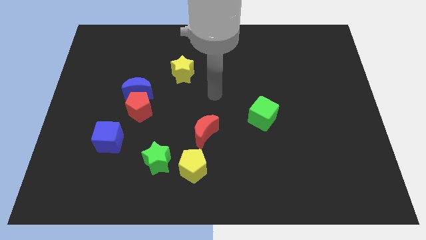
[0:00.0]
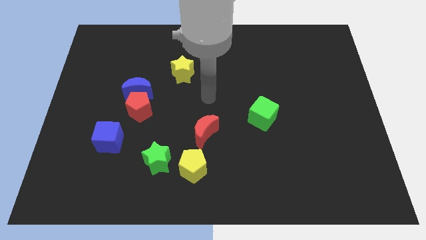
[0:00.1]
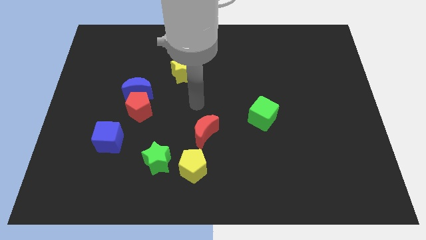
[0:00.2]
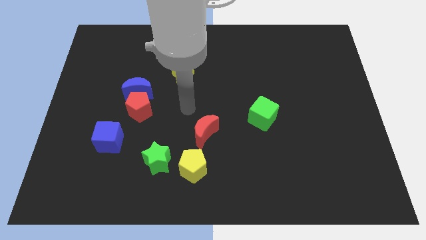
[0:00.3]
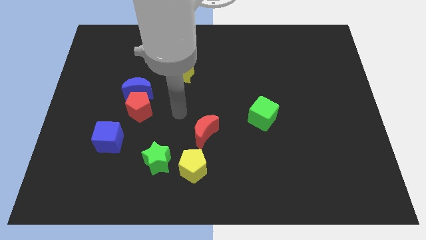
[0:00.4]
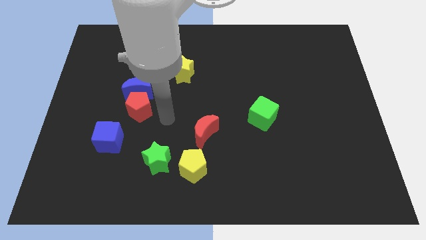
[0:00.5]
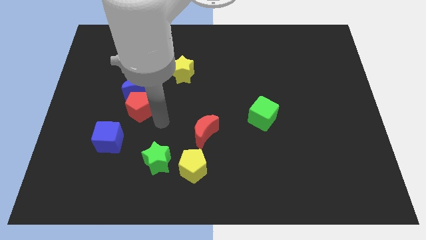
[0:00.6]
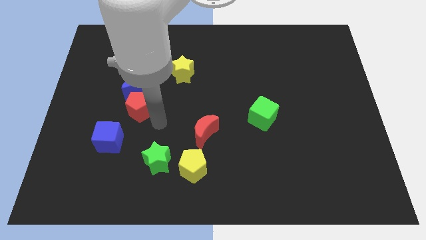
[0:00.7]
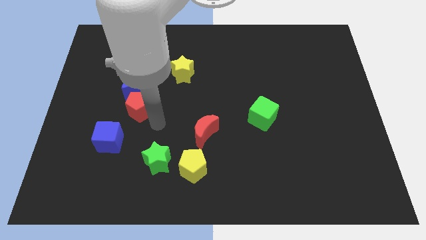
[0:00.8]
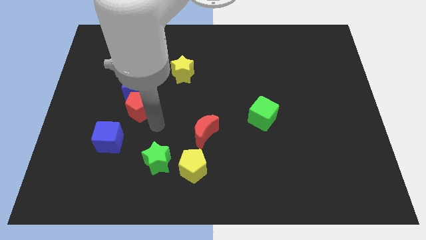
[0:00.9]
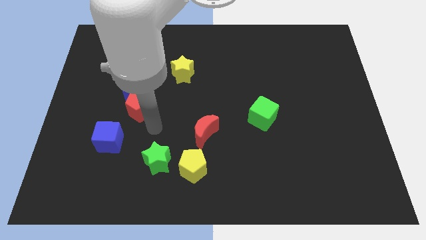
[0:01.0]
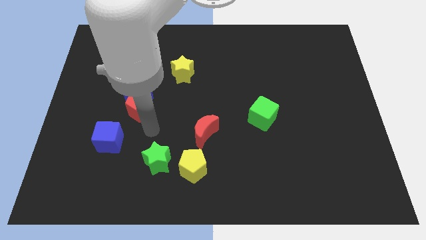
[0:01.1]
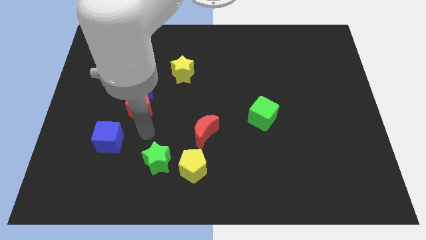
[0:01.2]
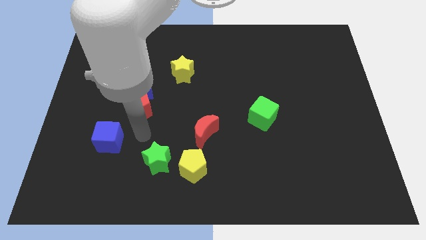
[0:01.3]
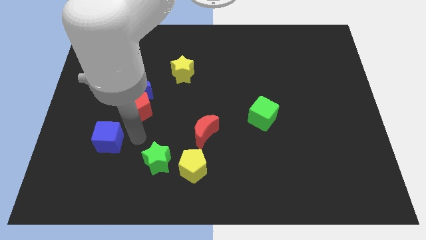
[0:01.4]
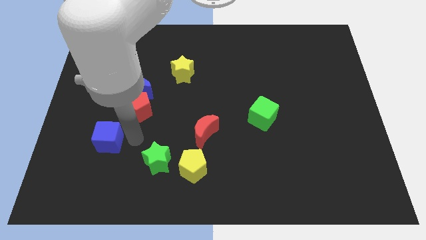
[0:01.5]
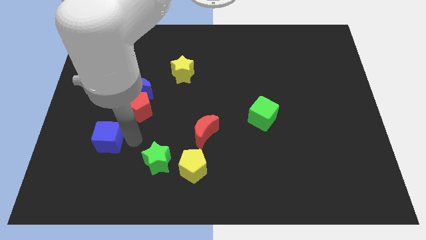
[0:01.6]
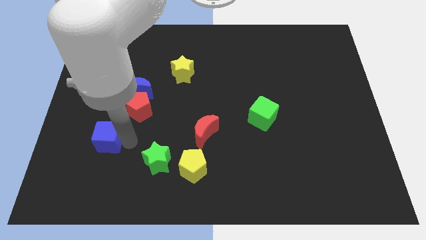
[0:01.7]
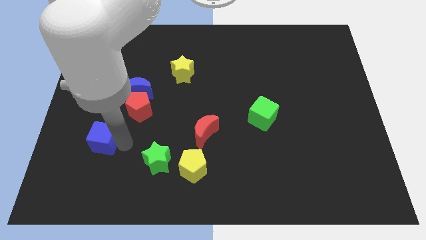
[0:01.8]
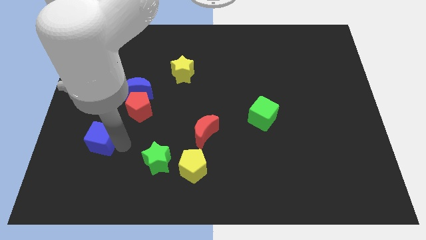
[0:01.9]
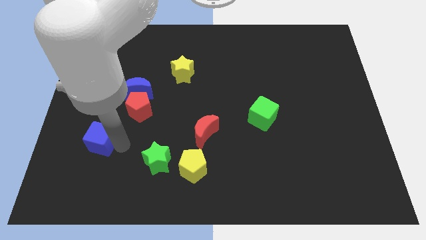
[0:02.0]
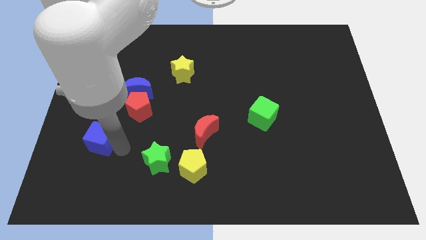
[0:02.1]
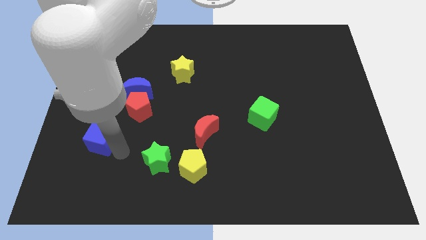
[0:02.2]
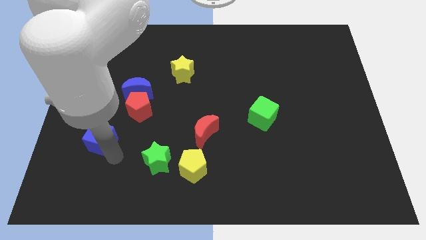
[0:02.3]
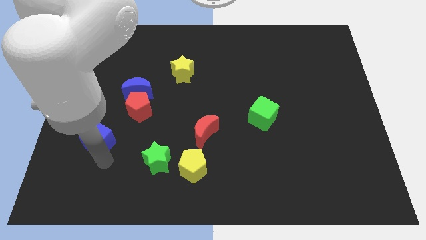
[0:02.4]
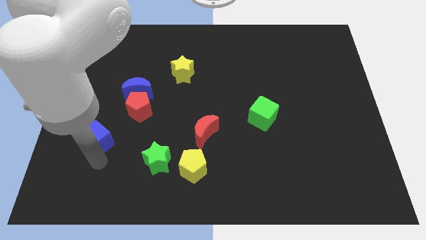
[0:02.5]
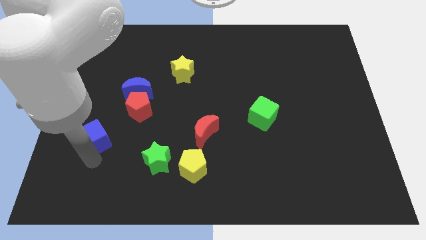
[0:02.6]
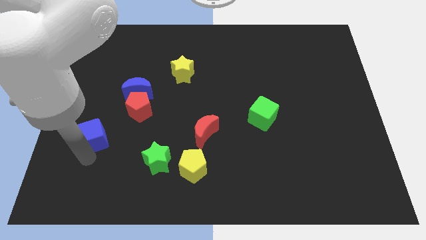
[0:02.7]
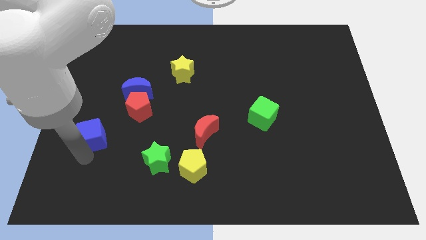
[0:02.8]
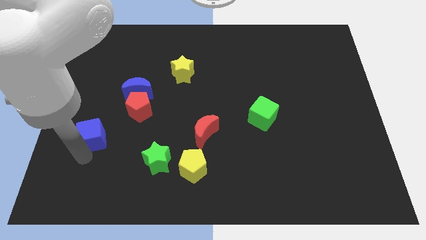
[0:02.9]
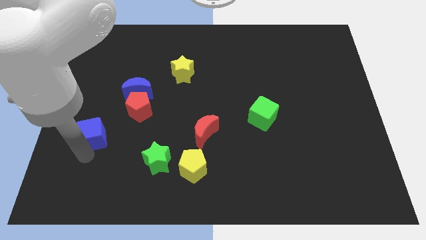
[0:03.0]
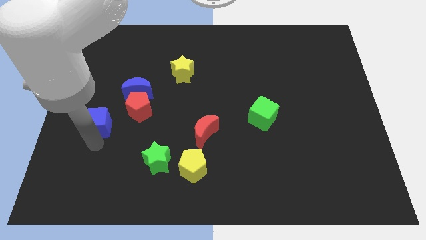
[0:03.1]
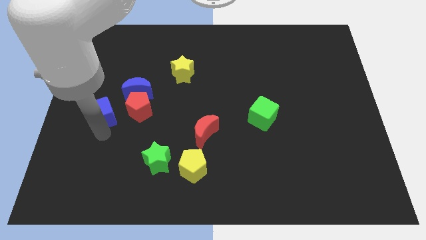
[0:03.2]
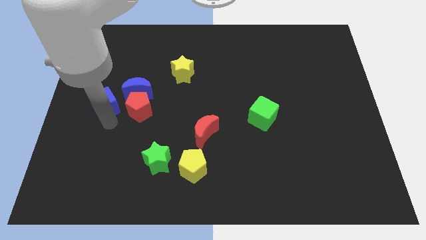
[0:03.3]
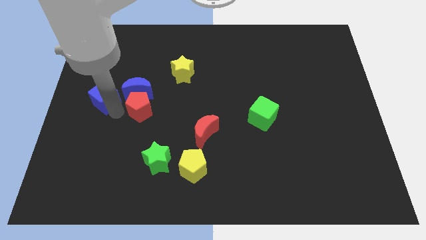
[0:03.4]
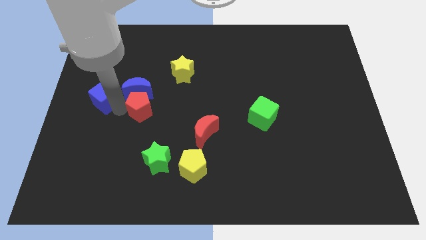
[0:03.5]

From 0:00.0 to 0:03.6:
push the blue cube to the left of the red pentagon

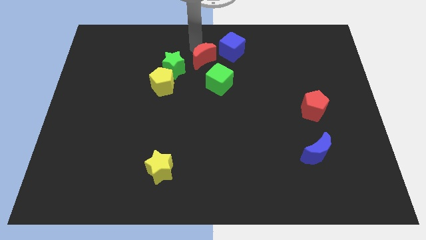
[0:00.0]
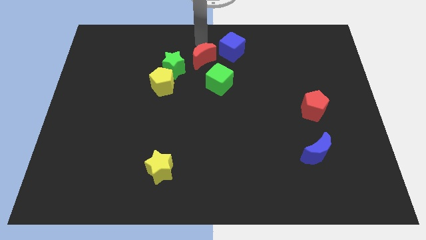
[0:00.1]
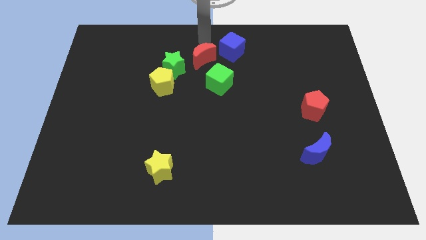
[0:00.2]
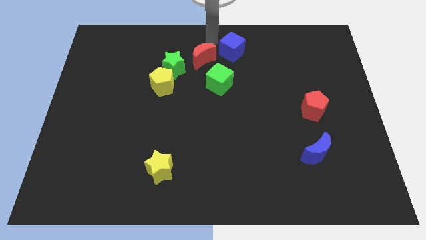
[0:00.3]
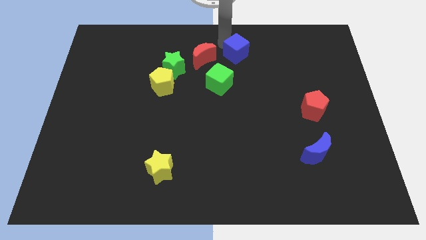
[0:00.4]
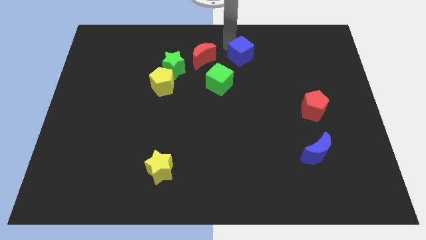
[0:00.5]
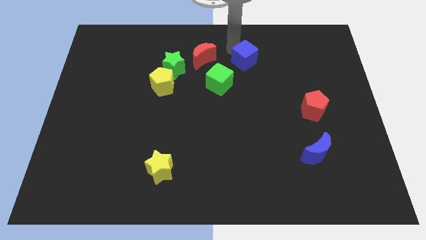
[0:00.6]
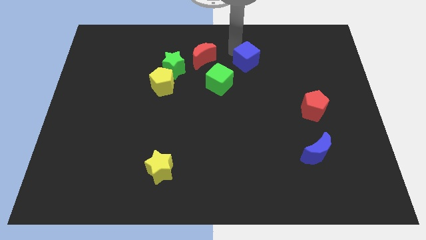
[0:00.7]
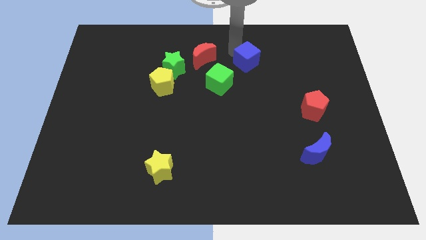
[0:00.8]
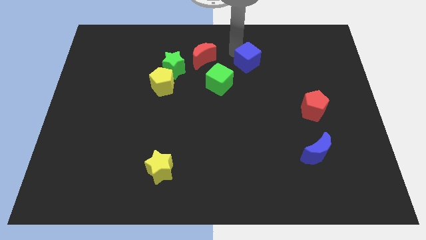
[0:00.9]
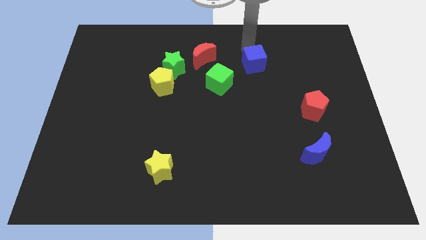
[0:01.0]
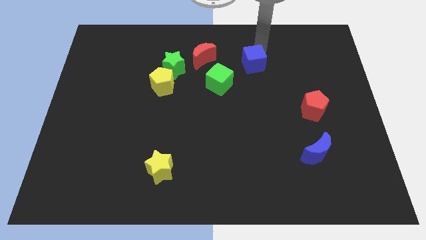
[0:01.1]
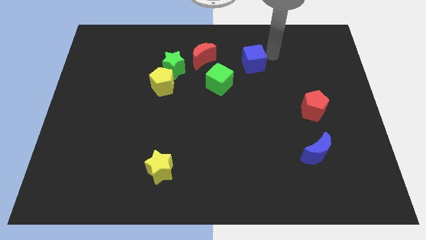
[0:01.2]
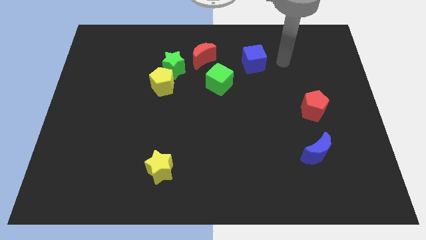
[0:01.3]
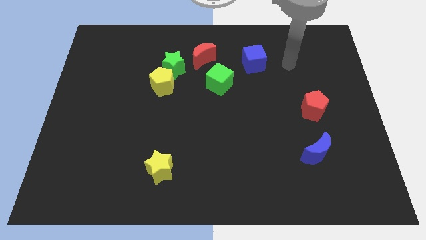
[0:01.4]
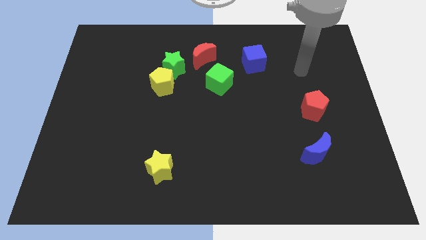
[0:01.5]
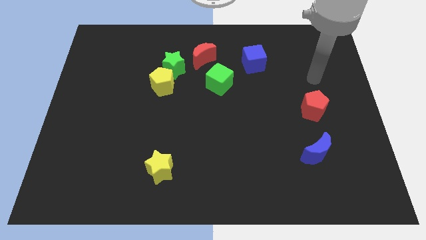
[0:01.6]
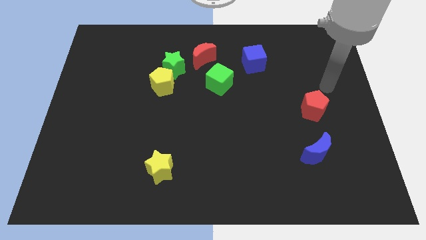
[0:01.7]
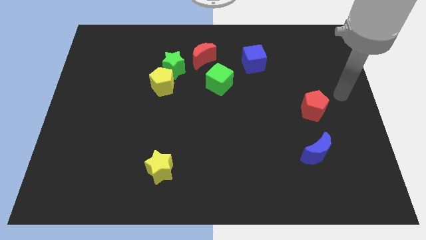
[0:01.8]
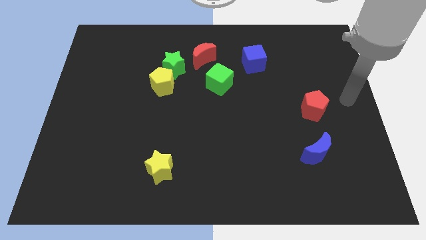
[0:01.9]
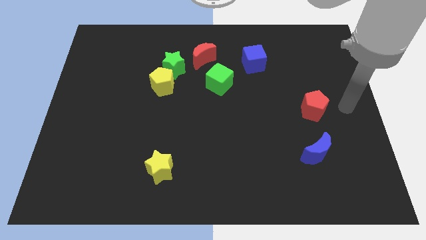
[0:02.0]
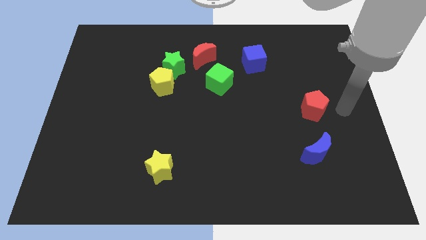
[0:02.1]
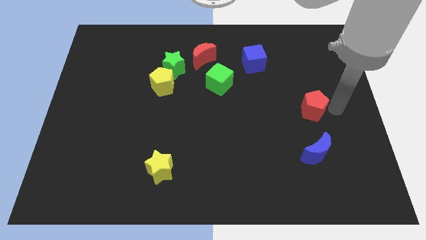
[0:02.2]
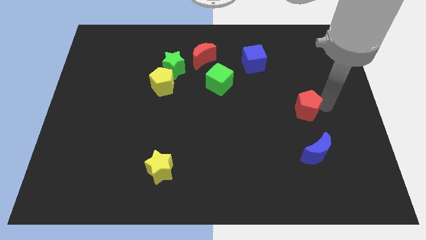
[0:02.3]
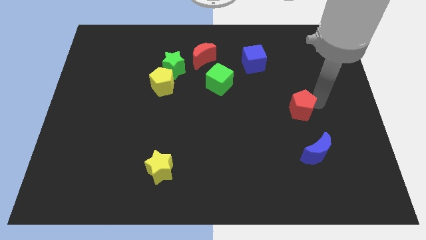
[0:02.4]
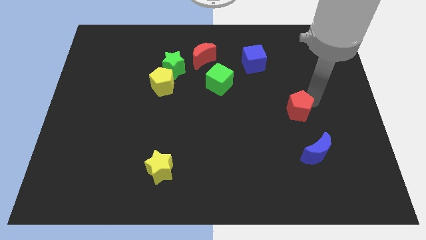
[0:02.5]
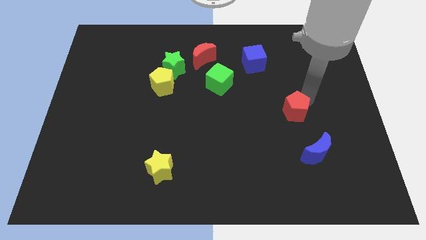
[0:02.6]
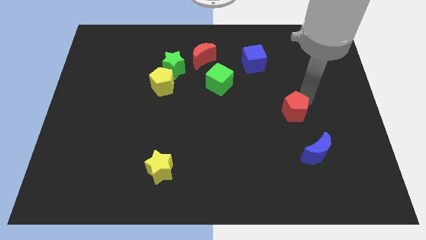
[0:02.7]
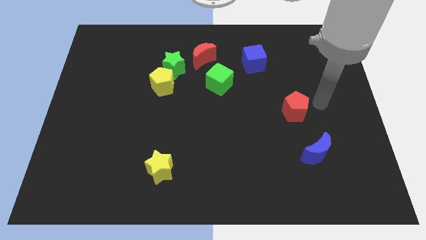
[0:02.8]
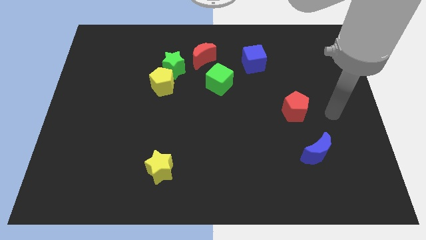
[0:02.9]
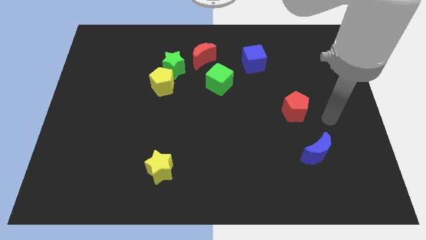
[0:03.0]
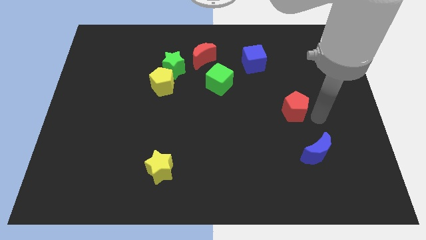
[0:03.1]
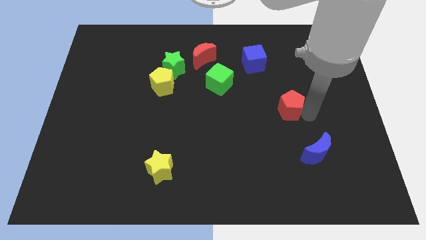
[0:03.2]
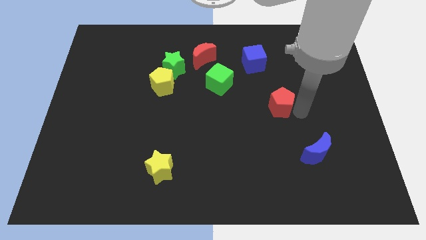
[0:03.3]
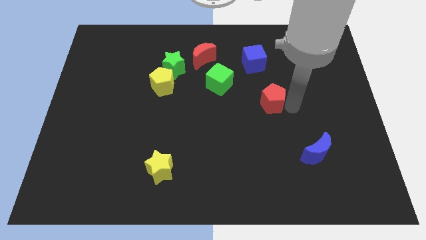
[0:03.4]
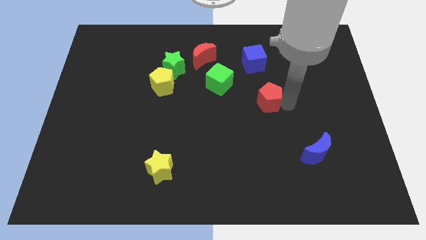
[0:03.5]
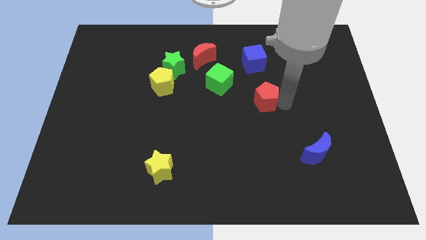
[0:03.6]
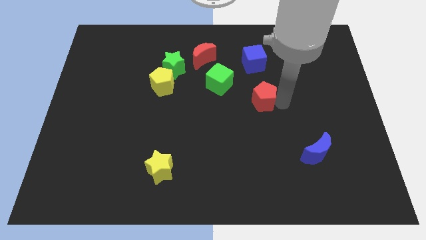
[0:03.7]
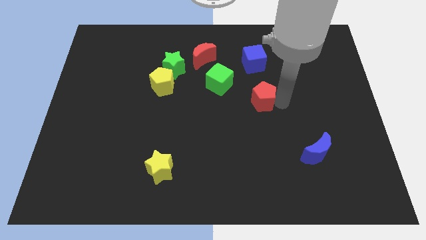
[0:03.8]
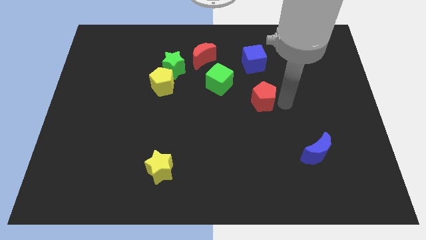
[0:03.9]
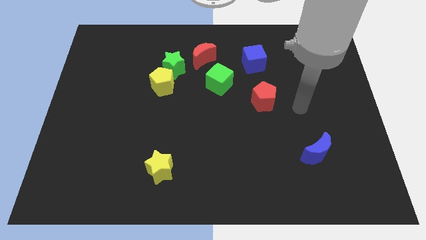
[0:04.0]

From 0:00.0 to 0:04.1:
move red cresent near the green cube

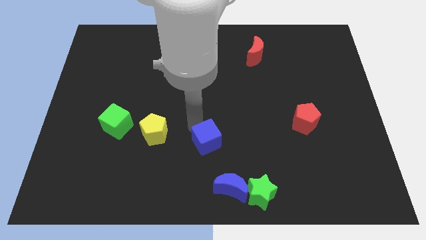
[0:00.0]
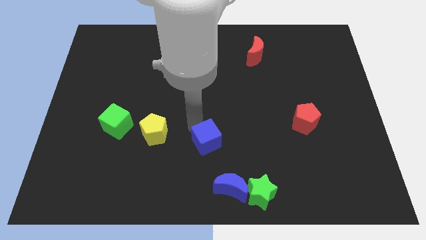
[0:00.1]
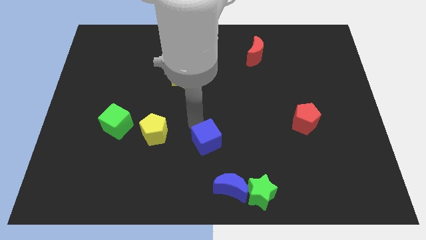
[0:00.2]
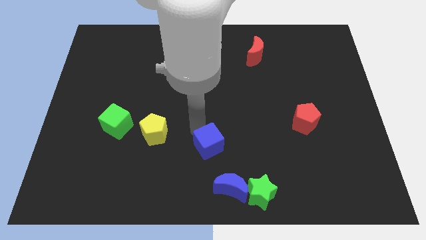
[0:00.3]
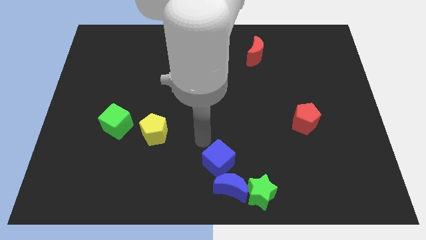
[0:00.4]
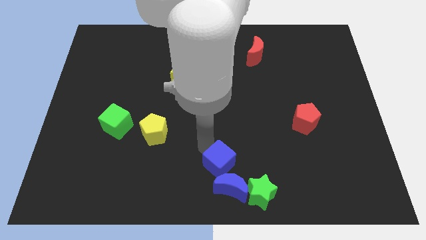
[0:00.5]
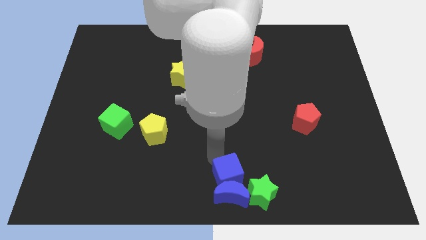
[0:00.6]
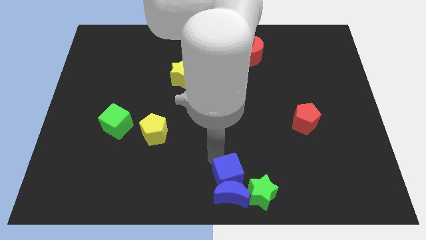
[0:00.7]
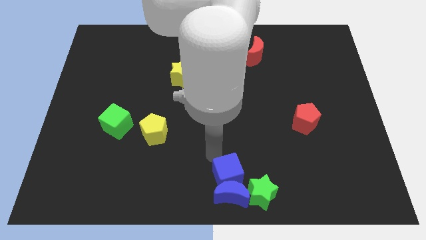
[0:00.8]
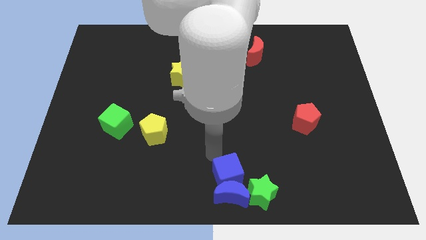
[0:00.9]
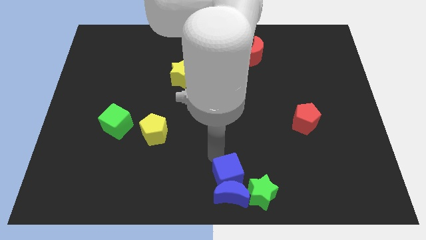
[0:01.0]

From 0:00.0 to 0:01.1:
push blue cube into blue moon

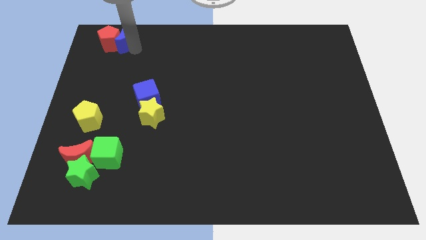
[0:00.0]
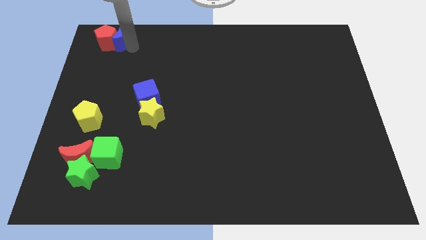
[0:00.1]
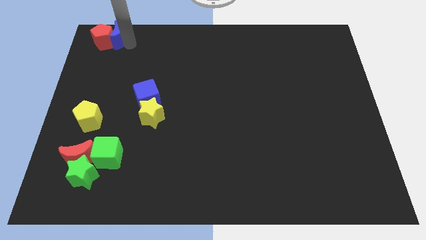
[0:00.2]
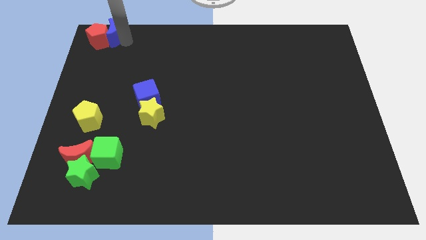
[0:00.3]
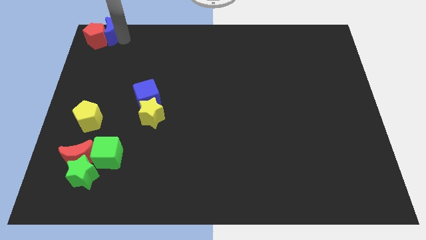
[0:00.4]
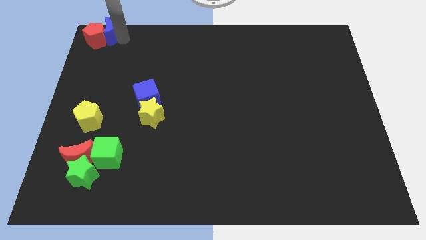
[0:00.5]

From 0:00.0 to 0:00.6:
push the blue crescent along with the red pentagon to the top left to the board
